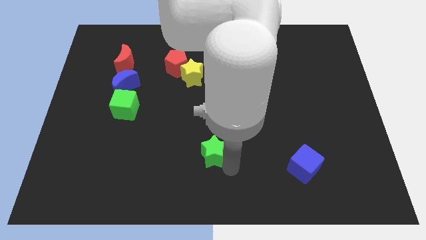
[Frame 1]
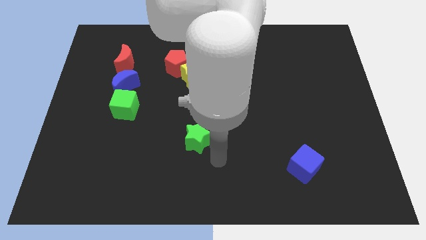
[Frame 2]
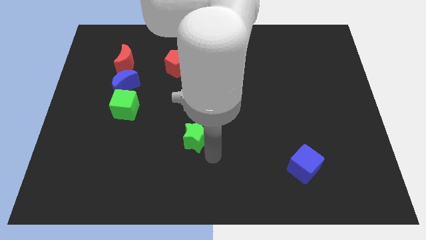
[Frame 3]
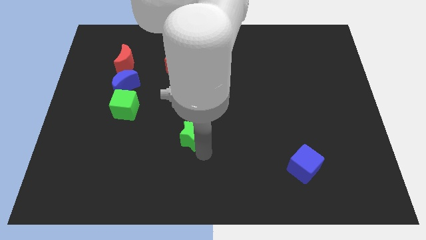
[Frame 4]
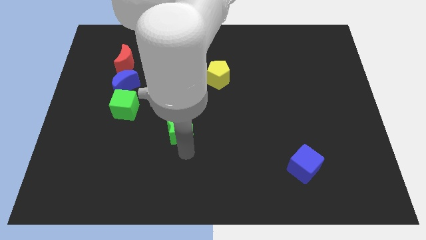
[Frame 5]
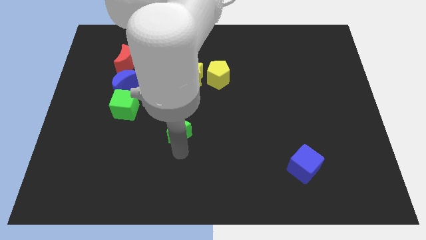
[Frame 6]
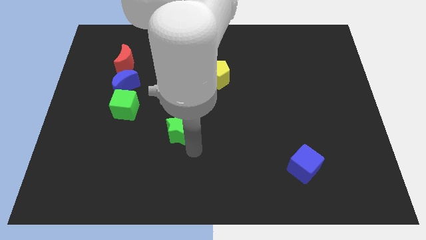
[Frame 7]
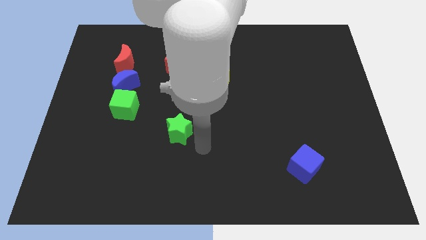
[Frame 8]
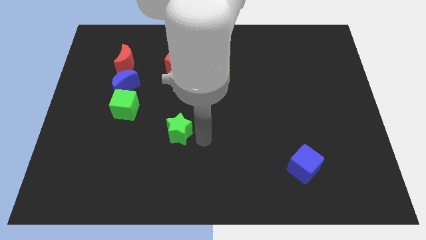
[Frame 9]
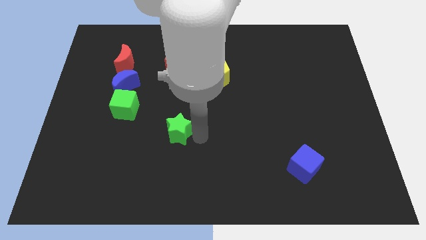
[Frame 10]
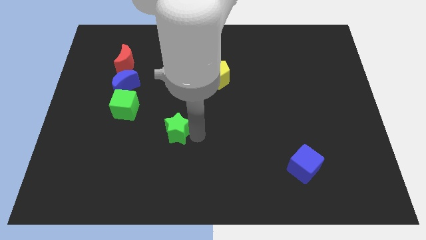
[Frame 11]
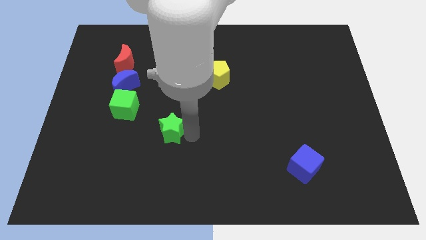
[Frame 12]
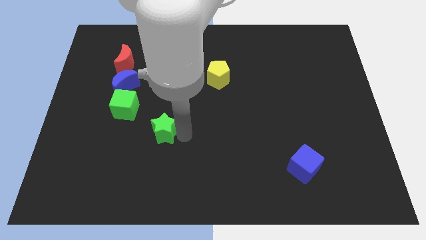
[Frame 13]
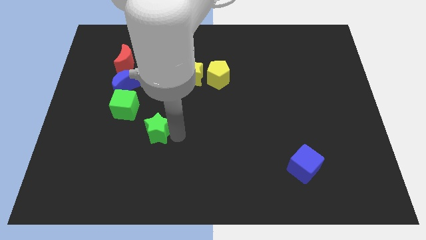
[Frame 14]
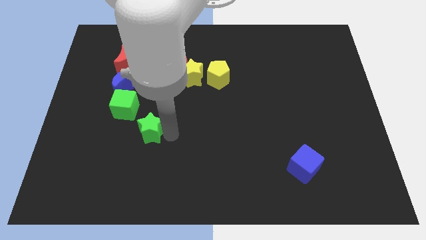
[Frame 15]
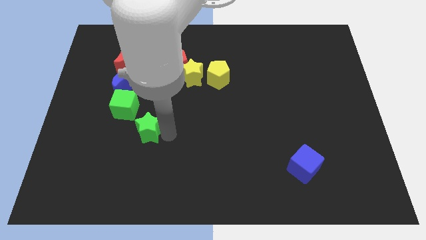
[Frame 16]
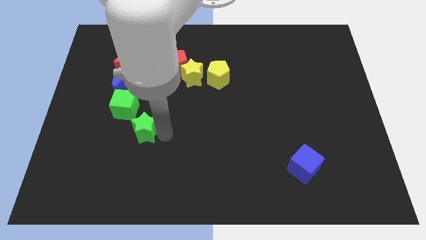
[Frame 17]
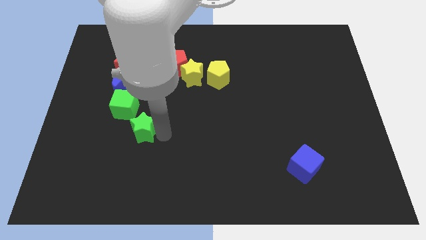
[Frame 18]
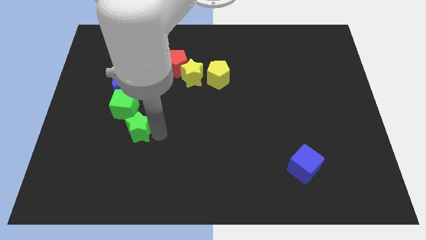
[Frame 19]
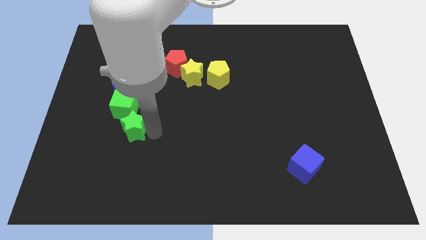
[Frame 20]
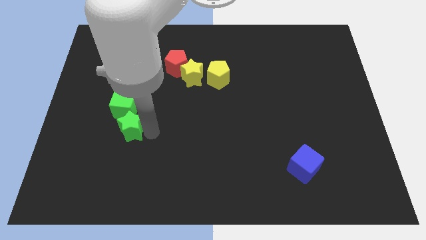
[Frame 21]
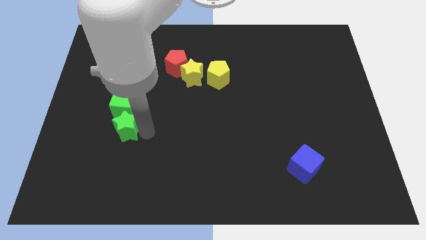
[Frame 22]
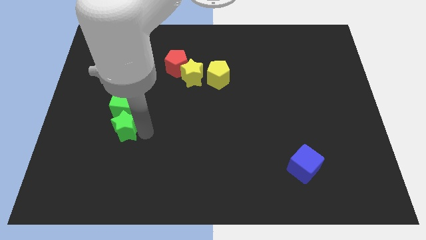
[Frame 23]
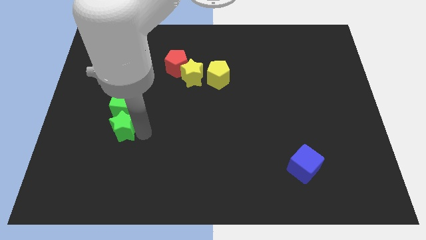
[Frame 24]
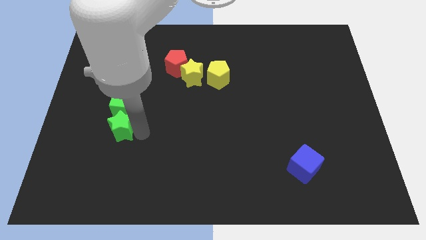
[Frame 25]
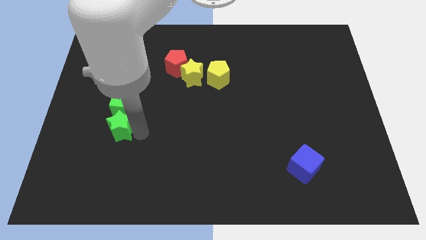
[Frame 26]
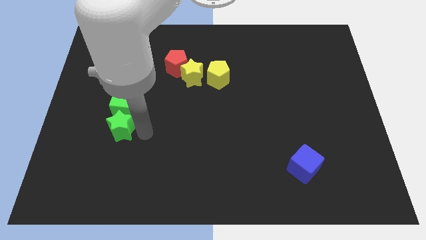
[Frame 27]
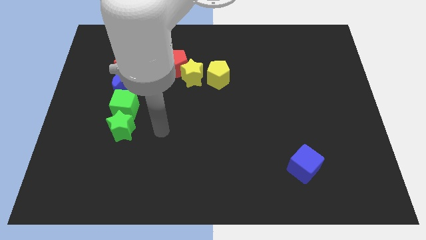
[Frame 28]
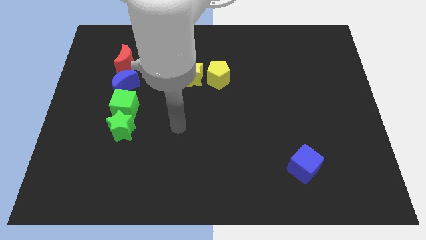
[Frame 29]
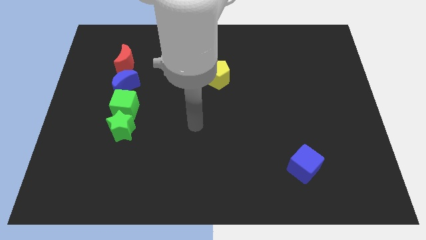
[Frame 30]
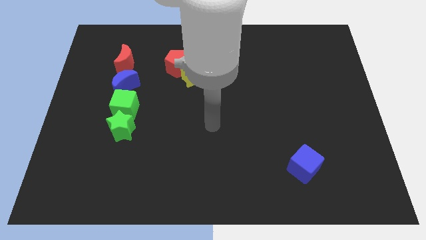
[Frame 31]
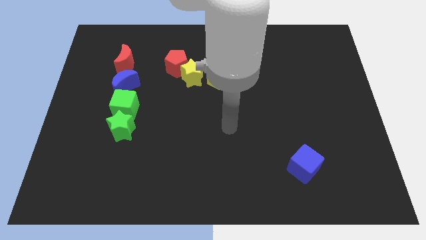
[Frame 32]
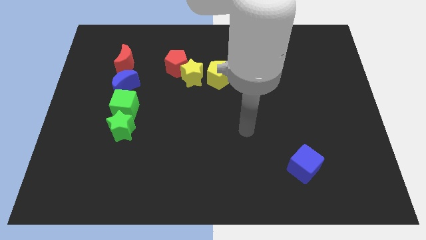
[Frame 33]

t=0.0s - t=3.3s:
place the green star below the green cube

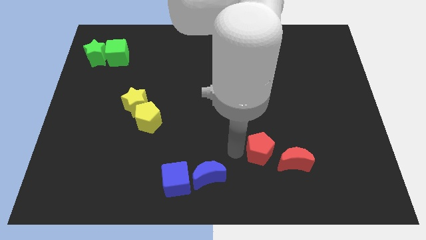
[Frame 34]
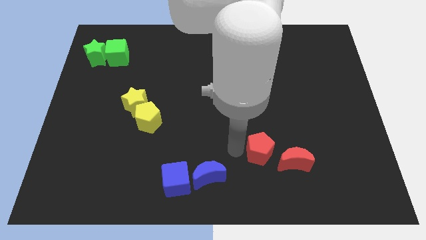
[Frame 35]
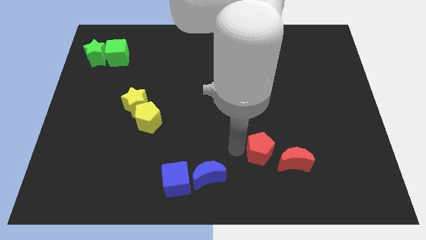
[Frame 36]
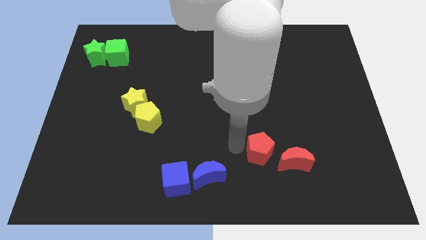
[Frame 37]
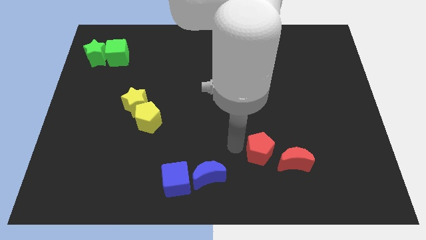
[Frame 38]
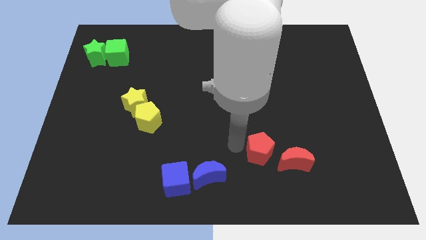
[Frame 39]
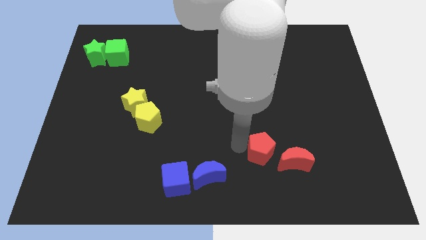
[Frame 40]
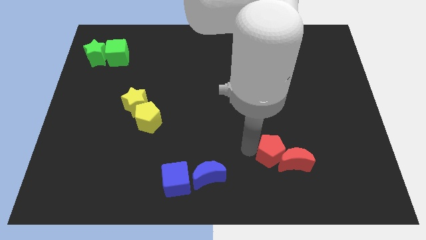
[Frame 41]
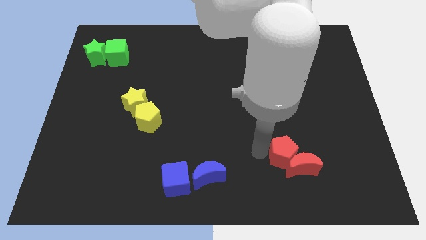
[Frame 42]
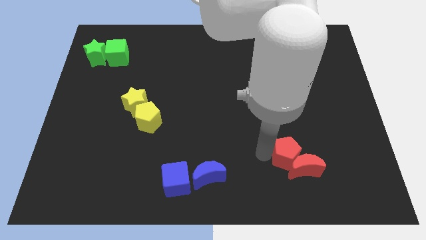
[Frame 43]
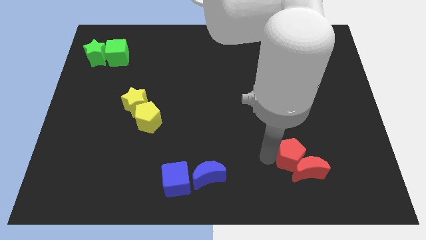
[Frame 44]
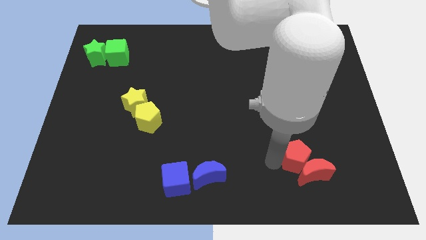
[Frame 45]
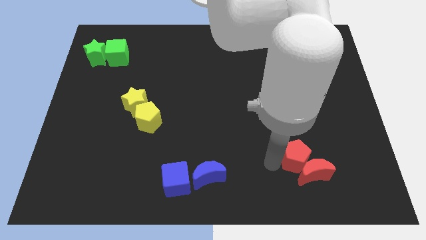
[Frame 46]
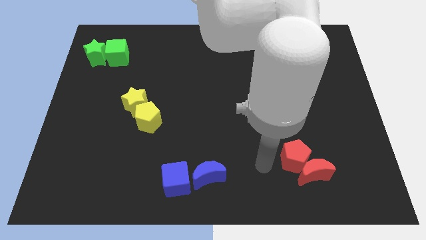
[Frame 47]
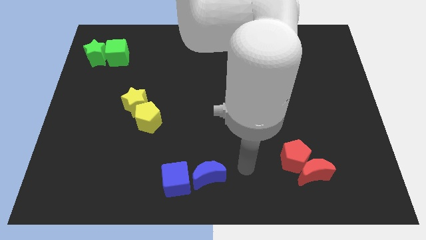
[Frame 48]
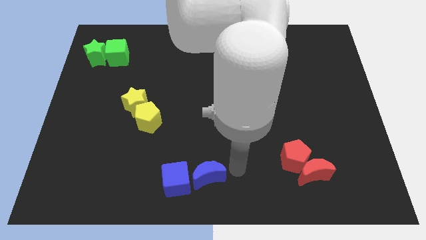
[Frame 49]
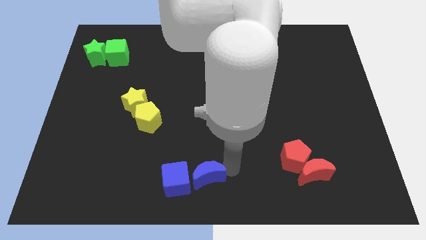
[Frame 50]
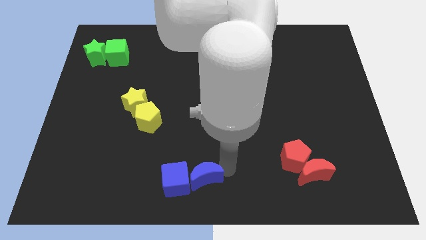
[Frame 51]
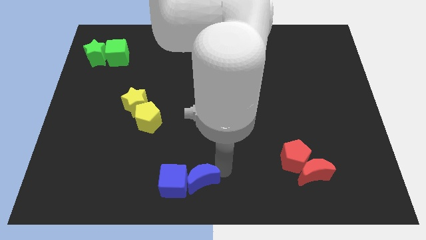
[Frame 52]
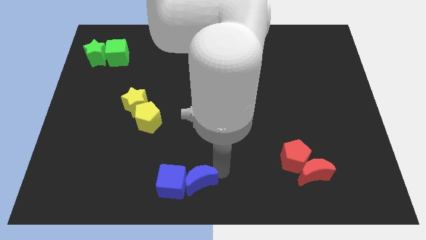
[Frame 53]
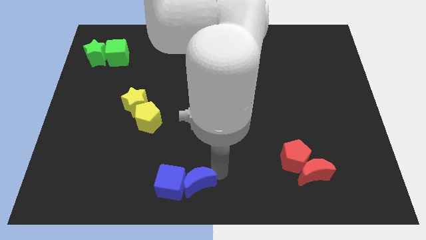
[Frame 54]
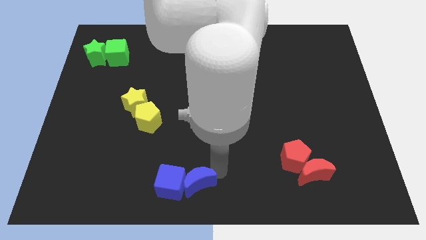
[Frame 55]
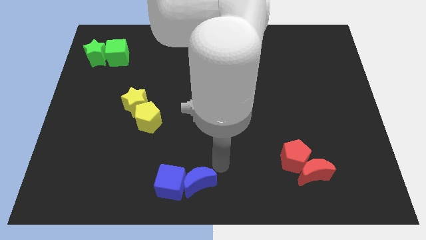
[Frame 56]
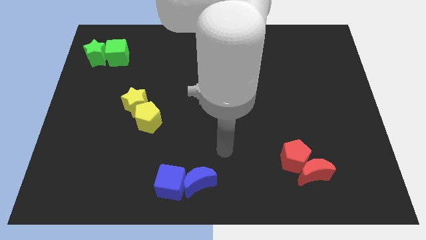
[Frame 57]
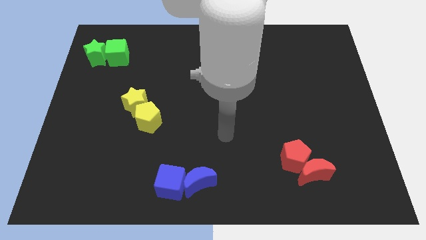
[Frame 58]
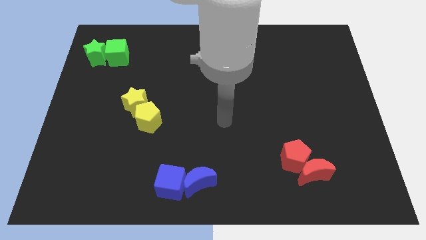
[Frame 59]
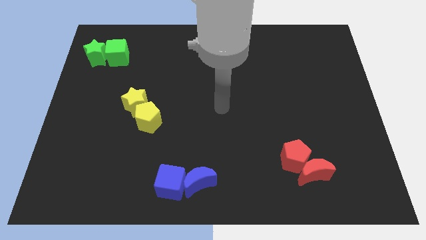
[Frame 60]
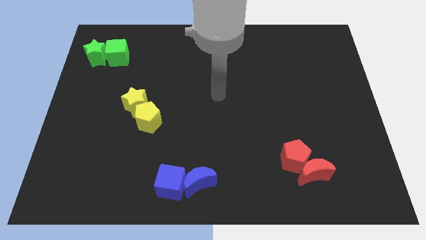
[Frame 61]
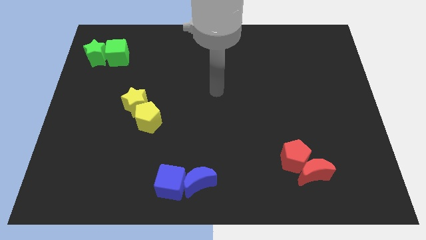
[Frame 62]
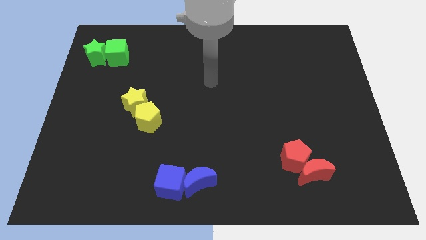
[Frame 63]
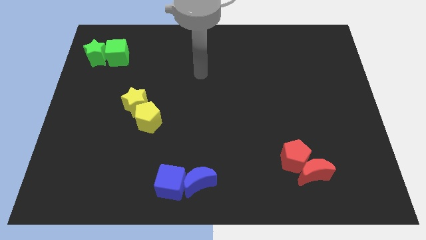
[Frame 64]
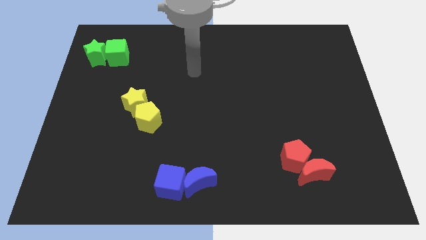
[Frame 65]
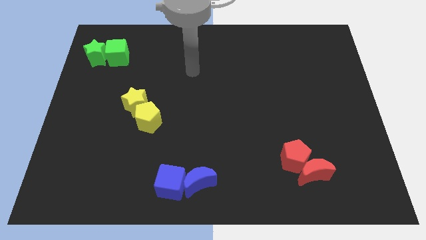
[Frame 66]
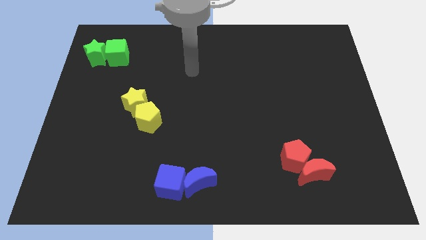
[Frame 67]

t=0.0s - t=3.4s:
move your arm away from the red pentagon

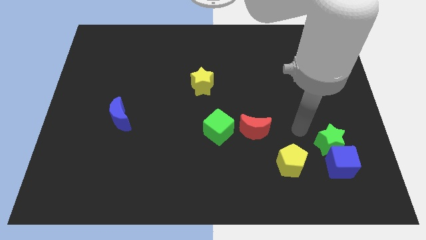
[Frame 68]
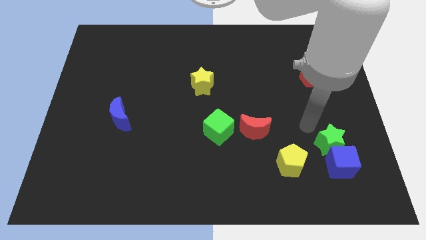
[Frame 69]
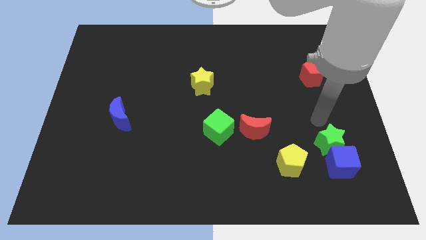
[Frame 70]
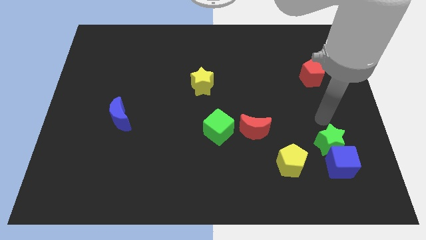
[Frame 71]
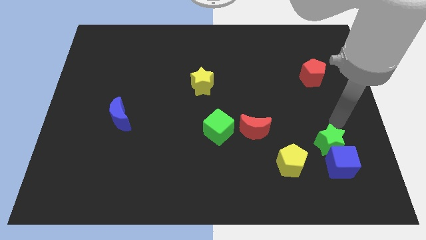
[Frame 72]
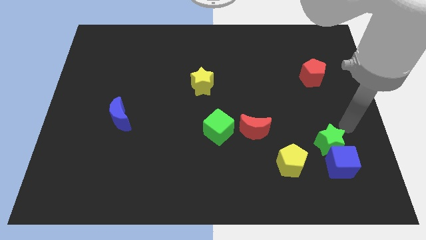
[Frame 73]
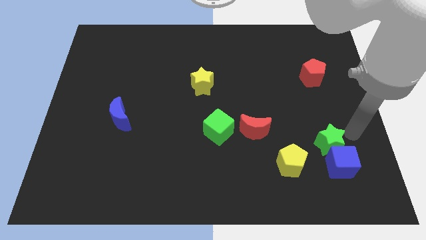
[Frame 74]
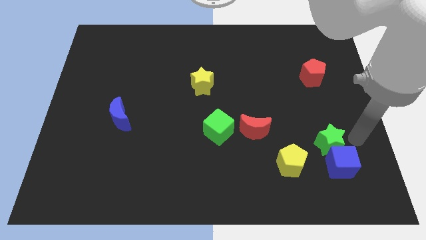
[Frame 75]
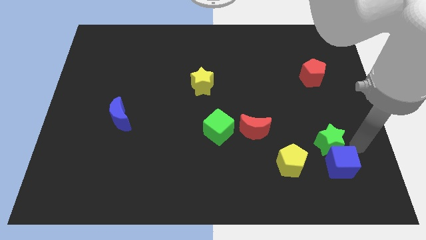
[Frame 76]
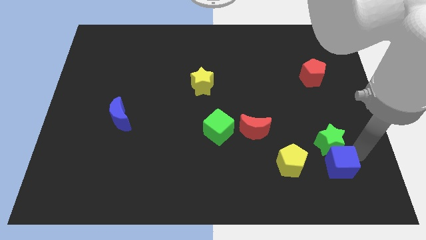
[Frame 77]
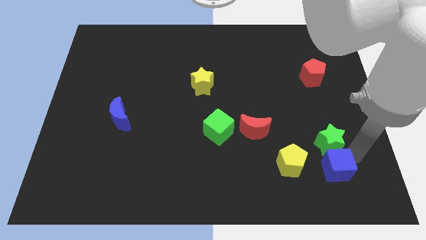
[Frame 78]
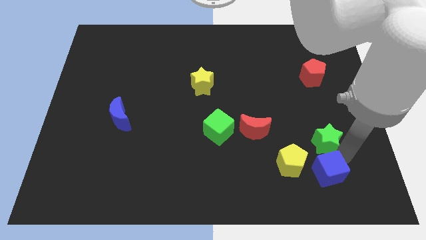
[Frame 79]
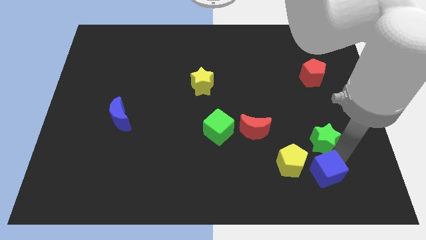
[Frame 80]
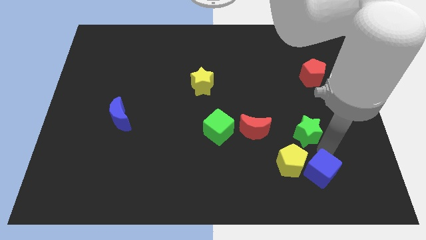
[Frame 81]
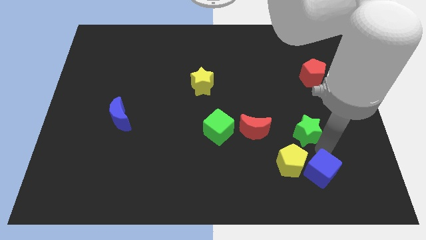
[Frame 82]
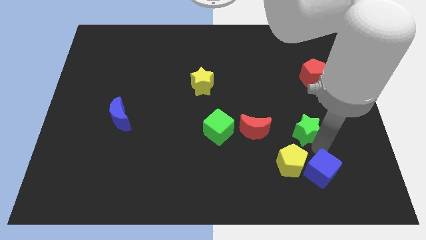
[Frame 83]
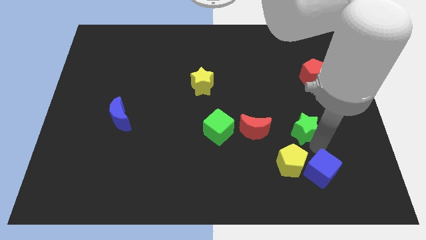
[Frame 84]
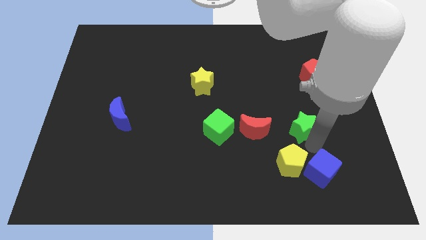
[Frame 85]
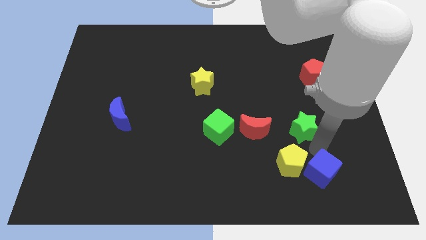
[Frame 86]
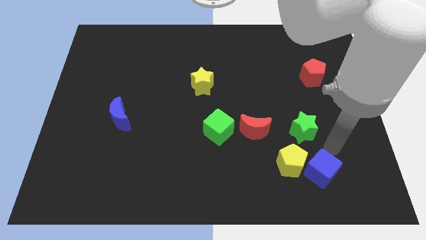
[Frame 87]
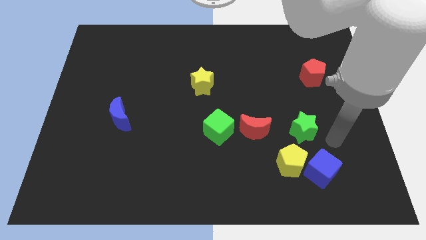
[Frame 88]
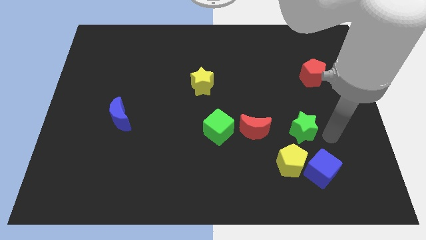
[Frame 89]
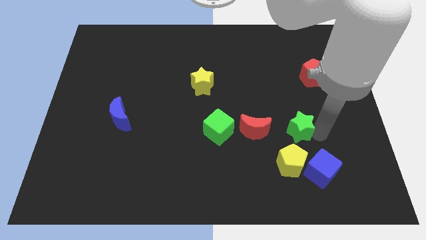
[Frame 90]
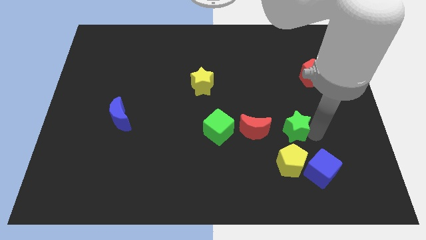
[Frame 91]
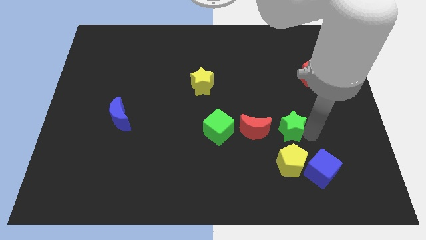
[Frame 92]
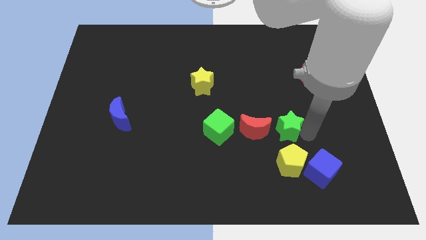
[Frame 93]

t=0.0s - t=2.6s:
separtae the green star and blue cube
